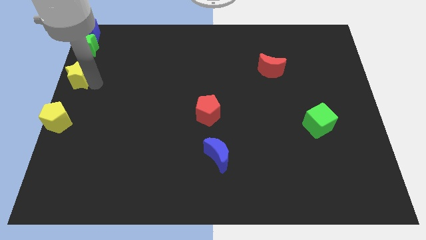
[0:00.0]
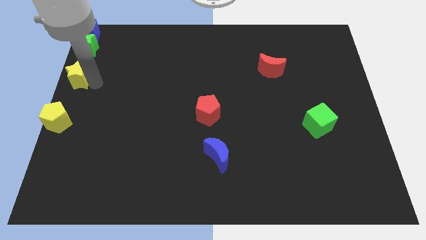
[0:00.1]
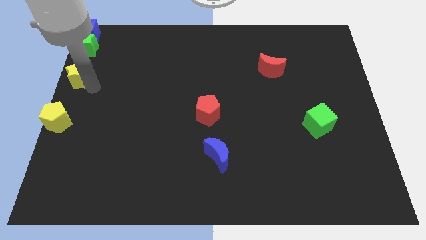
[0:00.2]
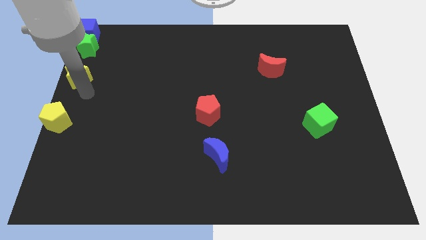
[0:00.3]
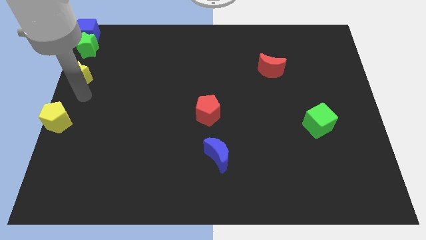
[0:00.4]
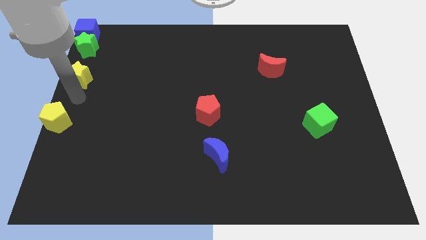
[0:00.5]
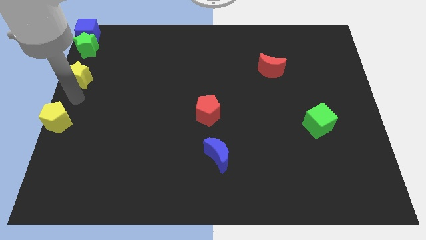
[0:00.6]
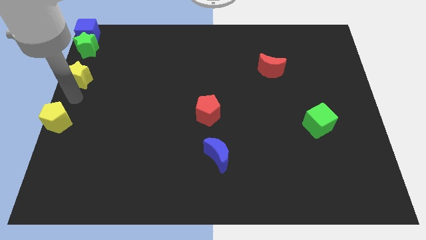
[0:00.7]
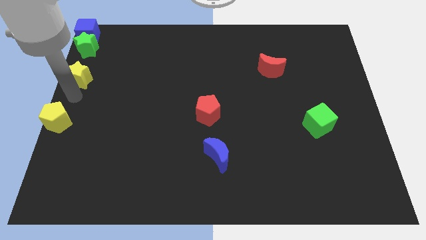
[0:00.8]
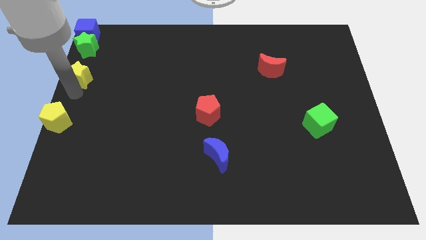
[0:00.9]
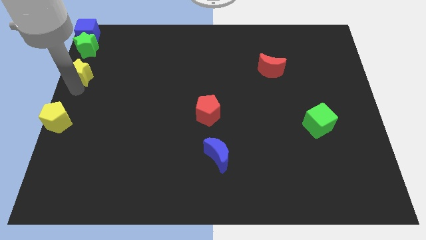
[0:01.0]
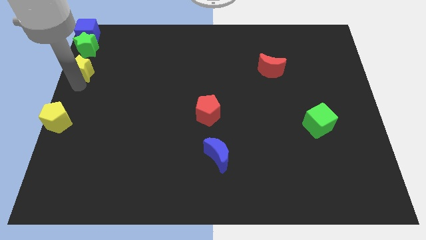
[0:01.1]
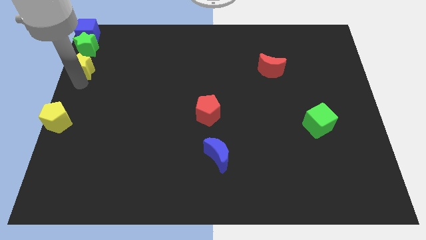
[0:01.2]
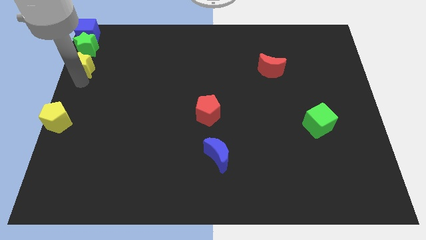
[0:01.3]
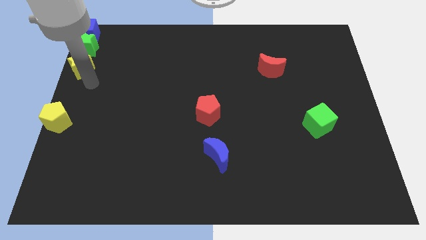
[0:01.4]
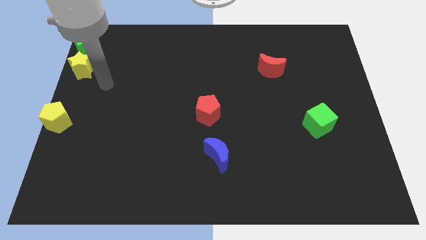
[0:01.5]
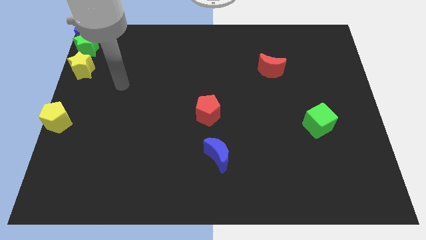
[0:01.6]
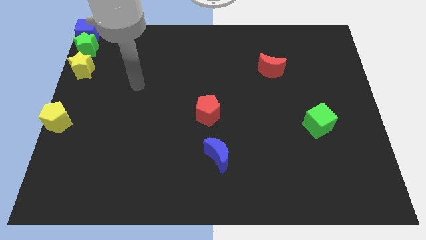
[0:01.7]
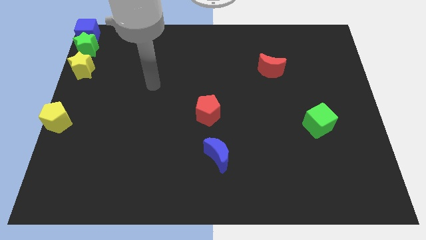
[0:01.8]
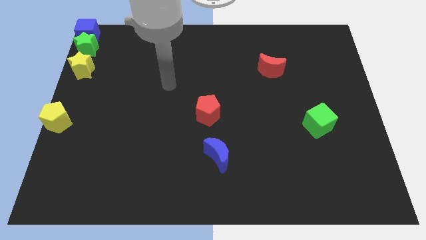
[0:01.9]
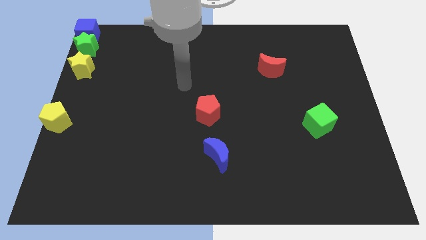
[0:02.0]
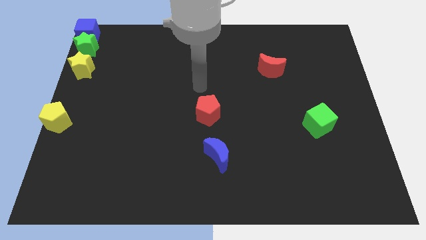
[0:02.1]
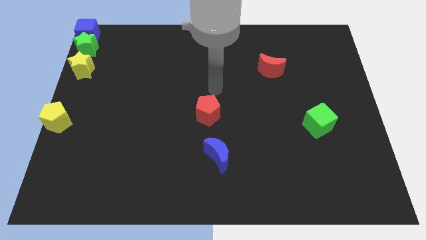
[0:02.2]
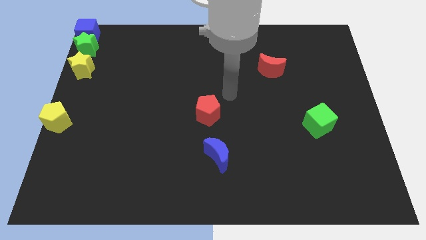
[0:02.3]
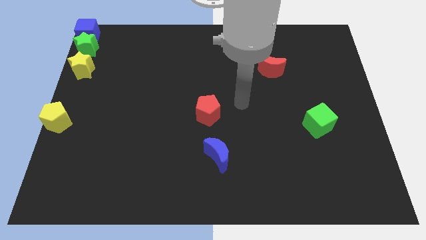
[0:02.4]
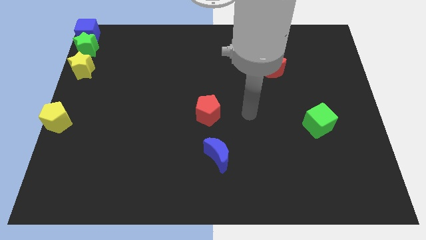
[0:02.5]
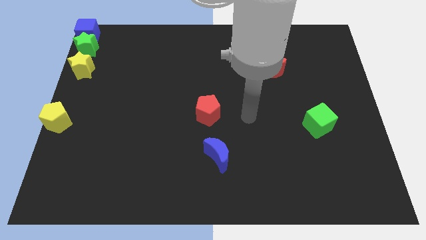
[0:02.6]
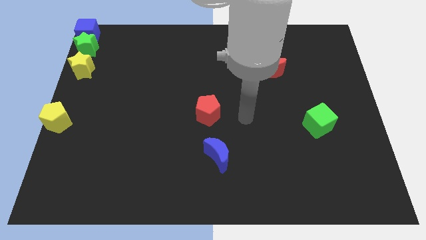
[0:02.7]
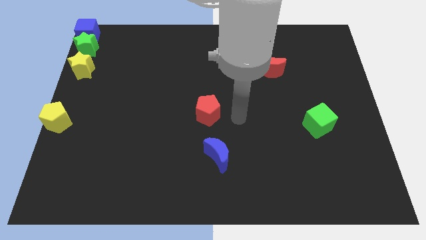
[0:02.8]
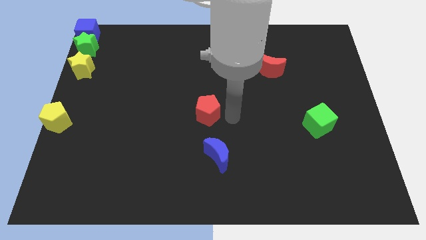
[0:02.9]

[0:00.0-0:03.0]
slightly push the yellow star into green star

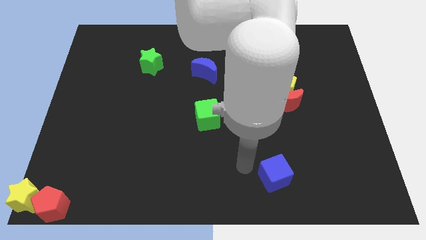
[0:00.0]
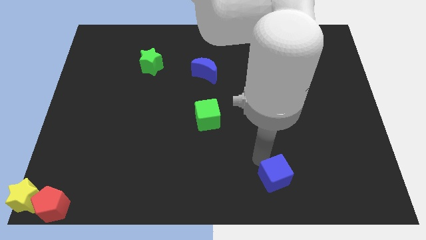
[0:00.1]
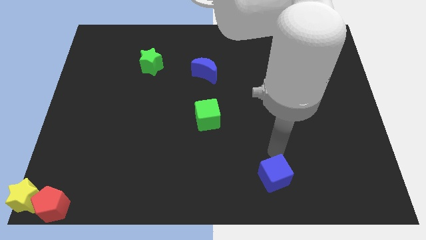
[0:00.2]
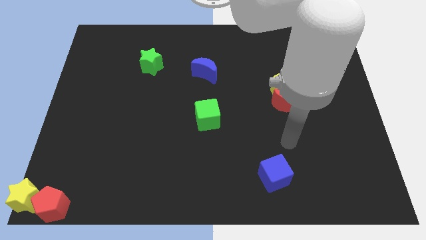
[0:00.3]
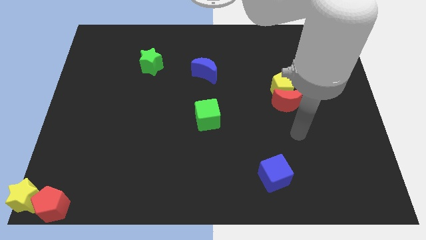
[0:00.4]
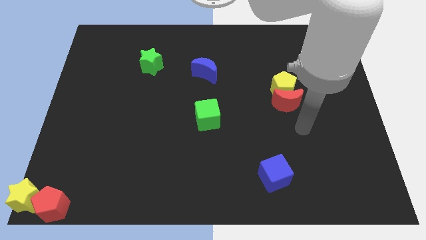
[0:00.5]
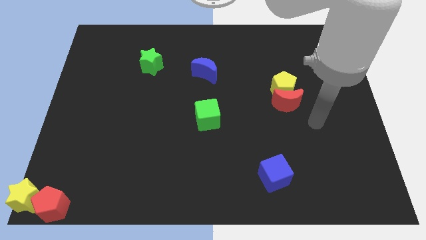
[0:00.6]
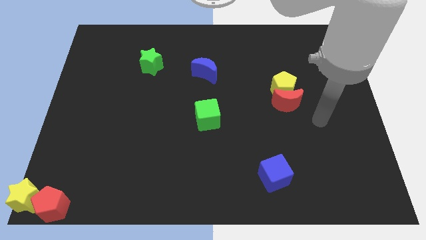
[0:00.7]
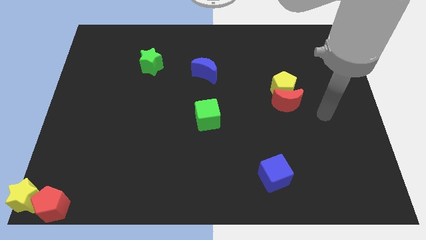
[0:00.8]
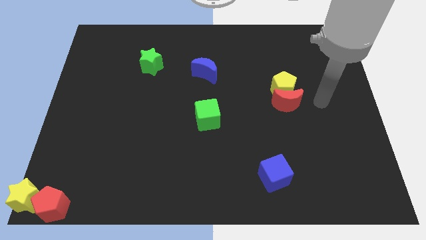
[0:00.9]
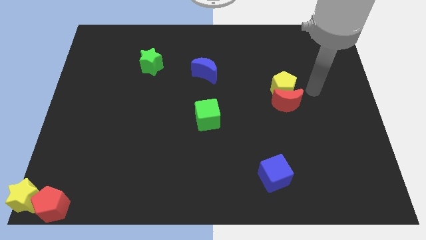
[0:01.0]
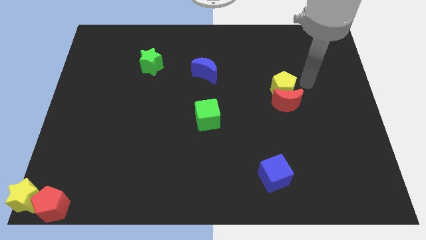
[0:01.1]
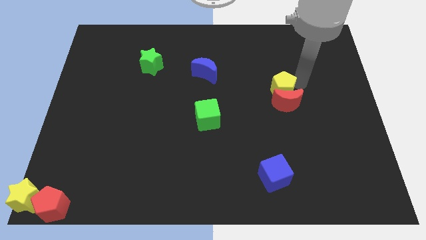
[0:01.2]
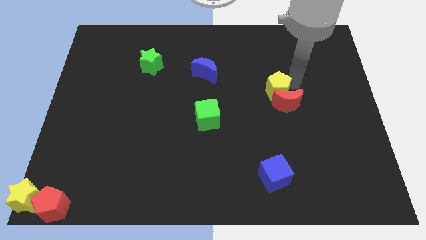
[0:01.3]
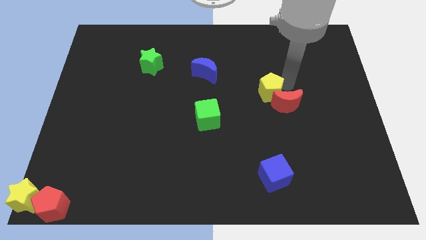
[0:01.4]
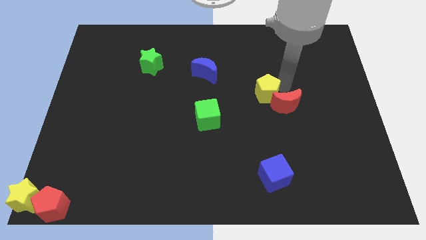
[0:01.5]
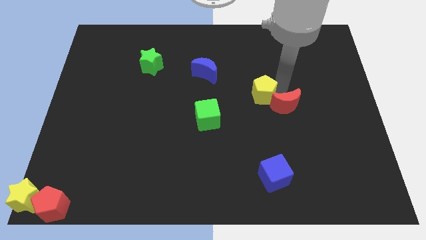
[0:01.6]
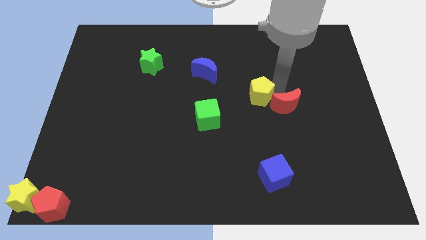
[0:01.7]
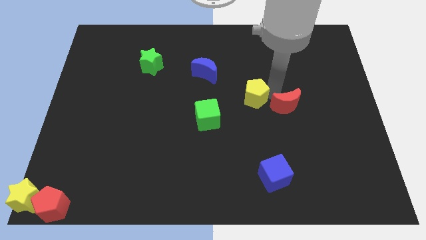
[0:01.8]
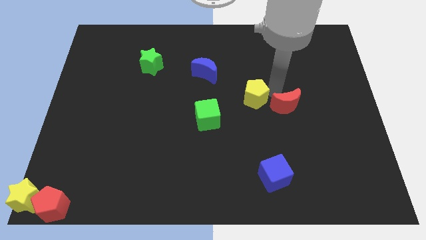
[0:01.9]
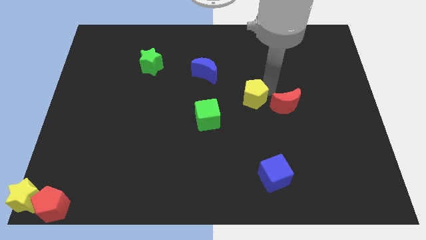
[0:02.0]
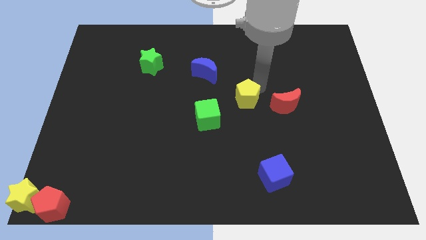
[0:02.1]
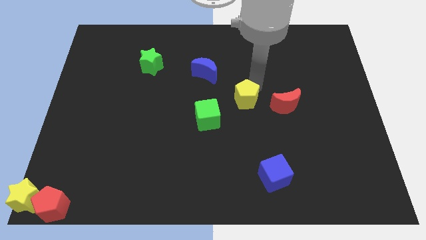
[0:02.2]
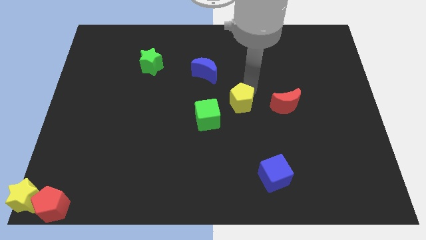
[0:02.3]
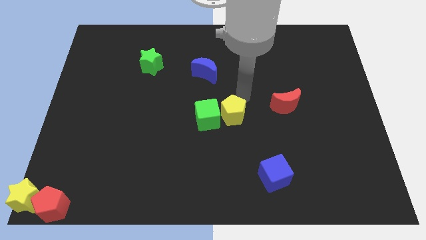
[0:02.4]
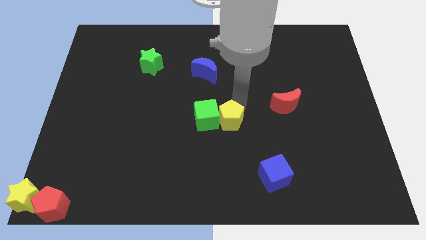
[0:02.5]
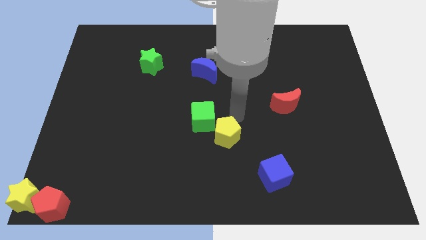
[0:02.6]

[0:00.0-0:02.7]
push the yellow pentagon to the right of the green cube

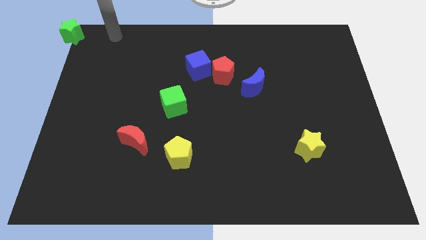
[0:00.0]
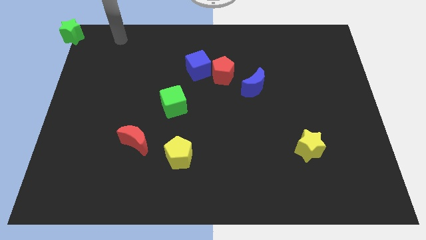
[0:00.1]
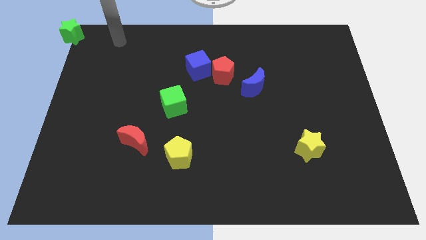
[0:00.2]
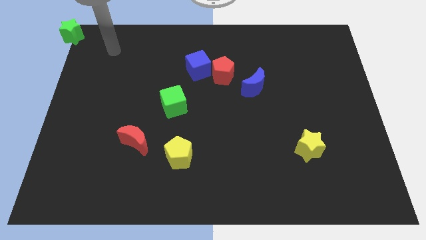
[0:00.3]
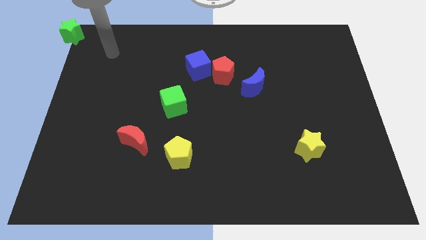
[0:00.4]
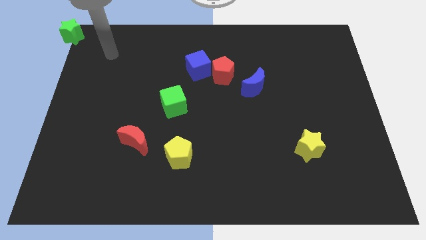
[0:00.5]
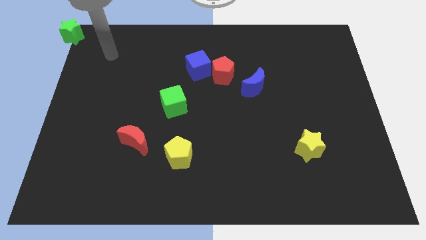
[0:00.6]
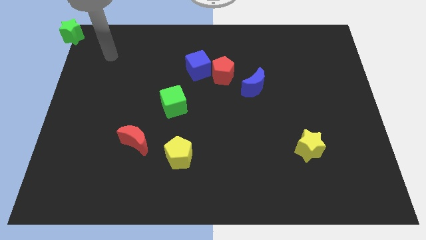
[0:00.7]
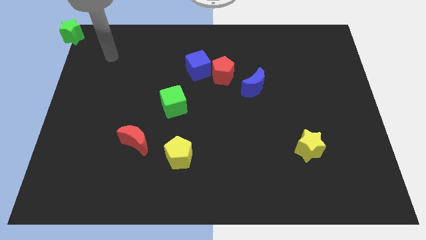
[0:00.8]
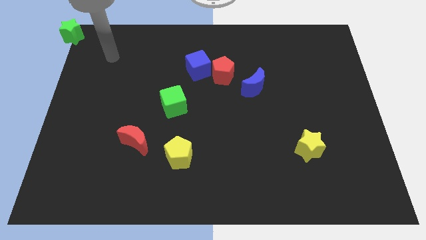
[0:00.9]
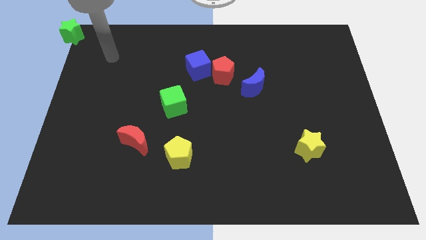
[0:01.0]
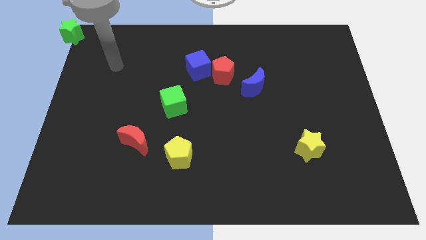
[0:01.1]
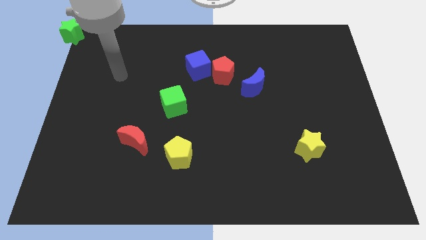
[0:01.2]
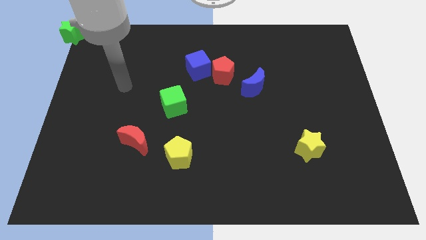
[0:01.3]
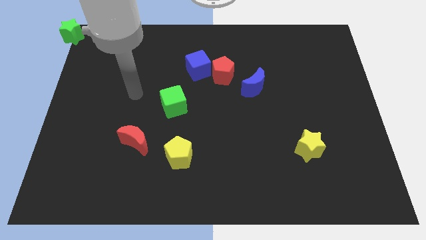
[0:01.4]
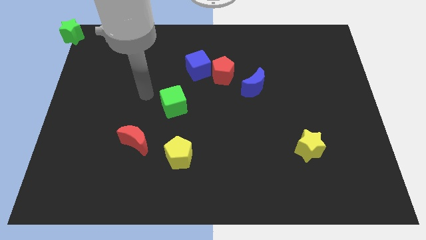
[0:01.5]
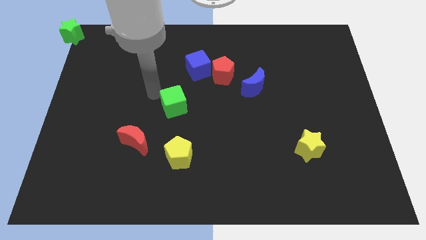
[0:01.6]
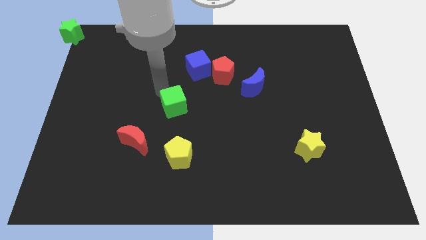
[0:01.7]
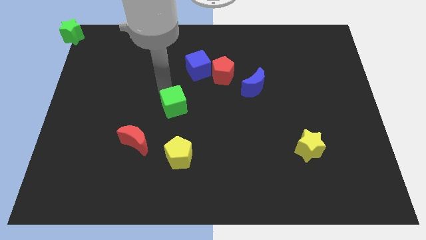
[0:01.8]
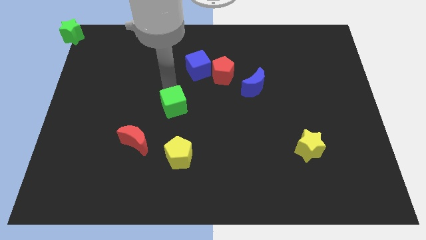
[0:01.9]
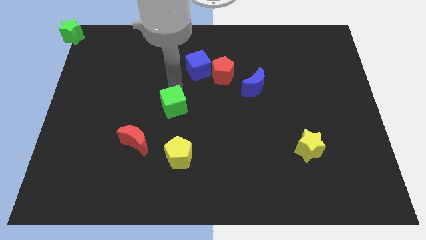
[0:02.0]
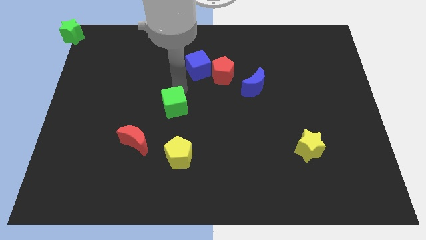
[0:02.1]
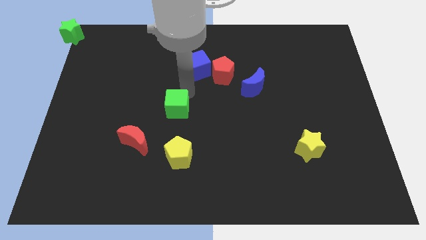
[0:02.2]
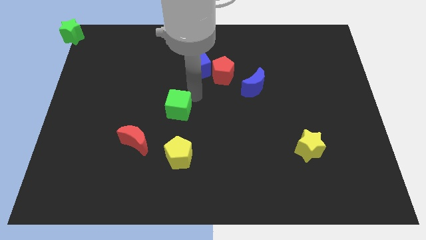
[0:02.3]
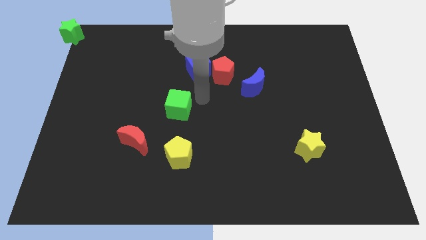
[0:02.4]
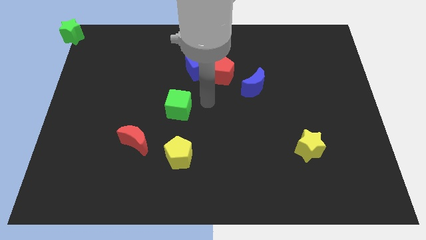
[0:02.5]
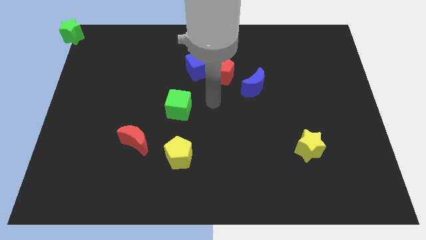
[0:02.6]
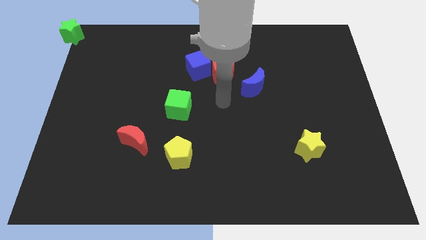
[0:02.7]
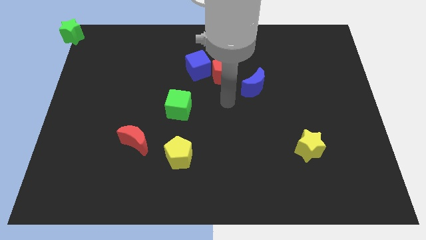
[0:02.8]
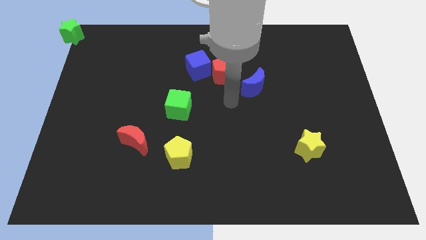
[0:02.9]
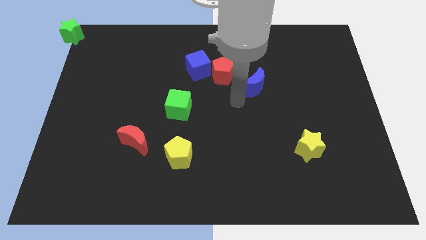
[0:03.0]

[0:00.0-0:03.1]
push your hand from the green star to the blue moon

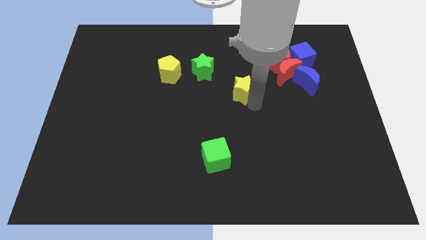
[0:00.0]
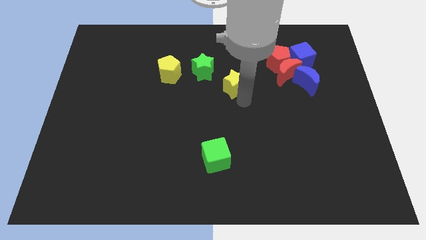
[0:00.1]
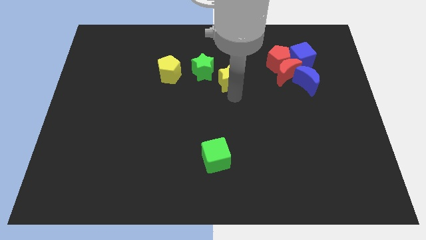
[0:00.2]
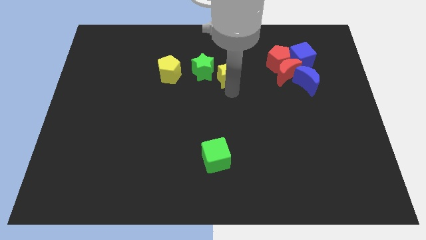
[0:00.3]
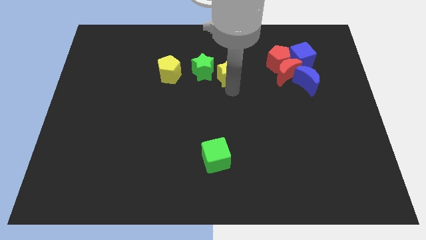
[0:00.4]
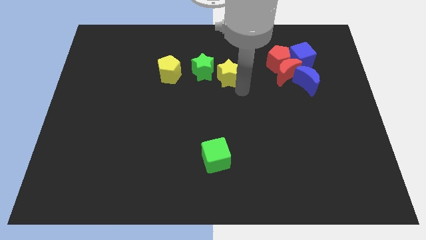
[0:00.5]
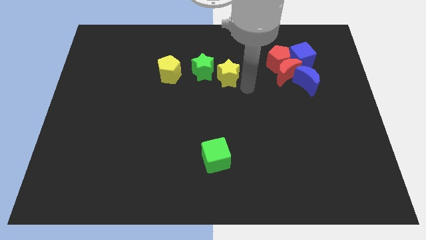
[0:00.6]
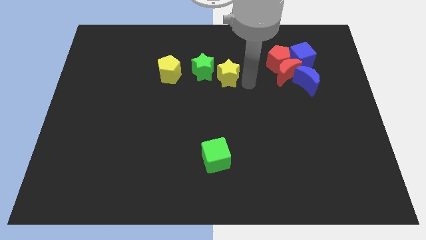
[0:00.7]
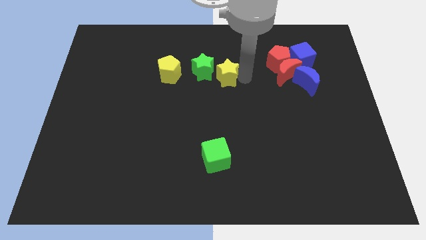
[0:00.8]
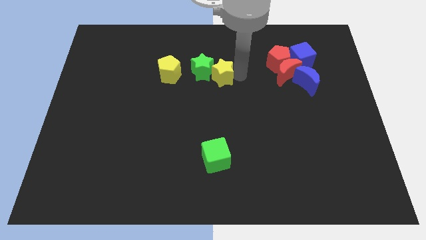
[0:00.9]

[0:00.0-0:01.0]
place the yellow star close to the green star
